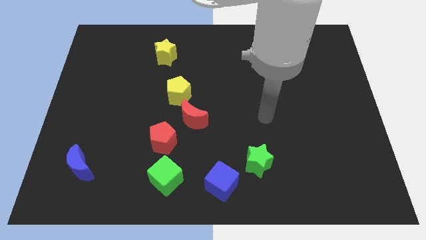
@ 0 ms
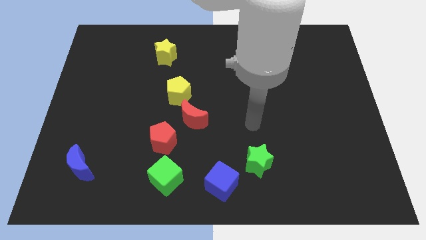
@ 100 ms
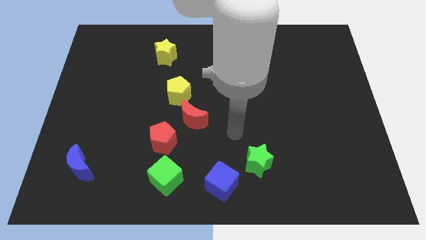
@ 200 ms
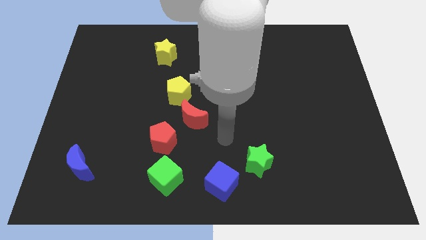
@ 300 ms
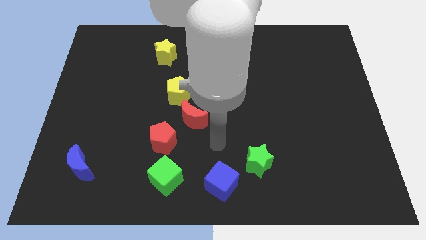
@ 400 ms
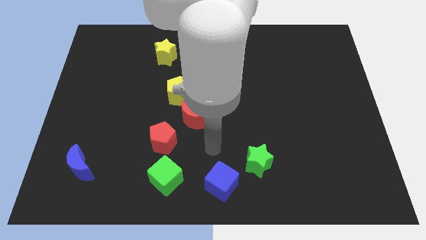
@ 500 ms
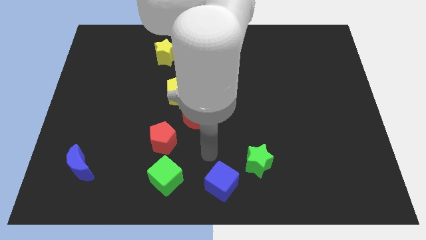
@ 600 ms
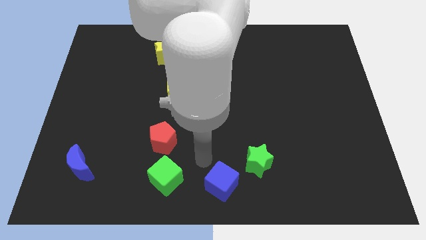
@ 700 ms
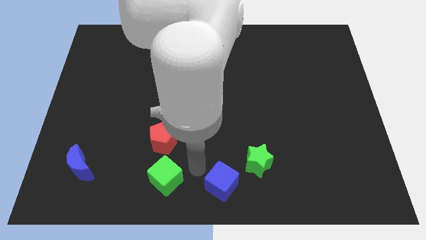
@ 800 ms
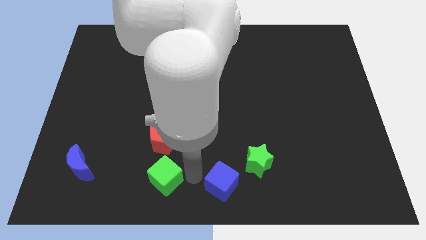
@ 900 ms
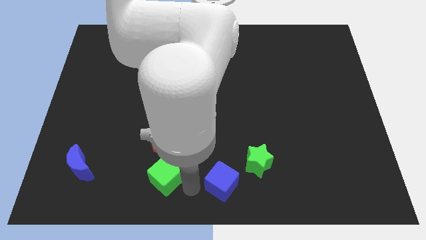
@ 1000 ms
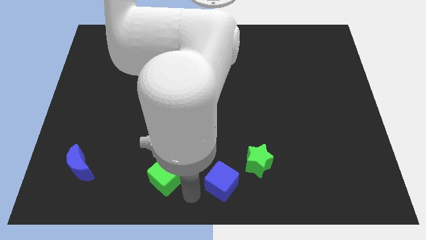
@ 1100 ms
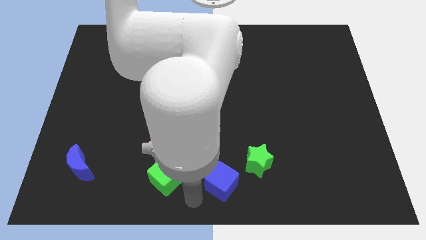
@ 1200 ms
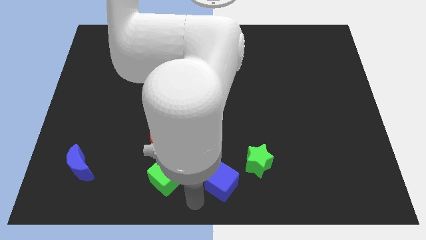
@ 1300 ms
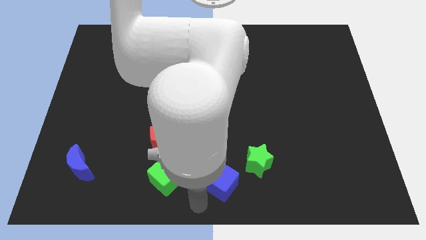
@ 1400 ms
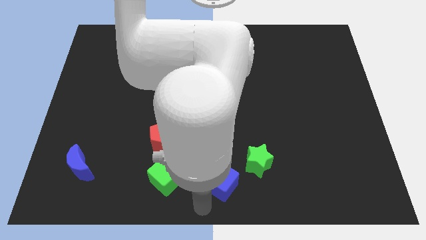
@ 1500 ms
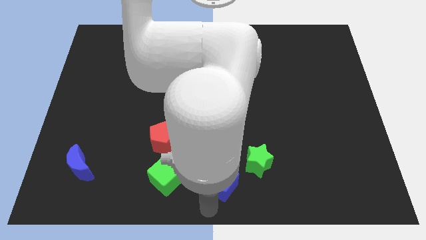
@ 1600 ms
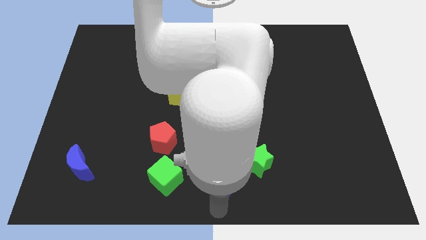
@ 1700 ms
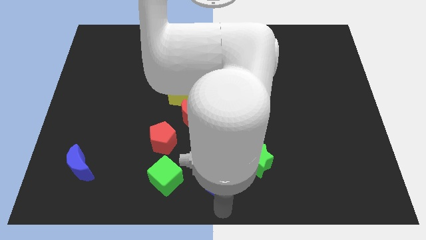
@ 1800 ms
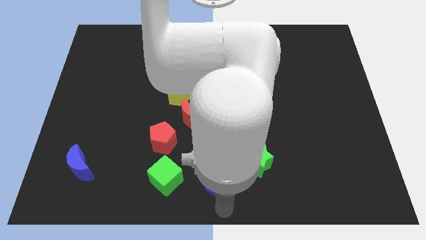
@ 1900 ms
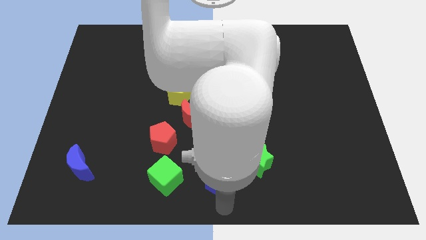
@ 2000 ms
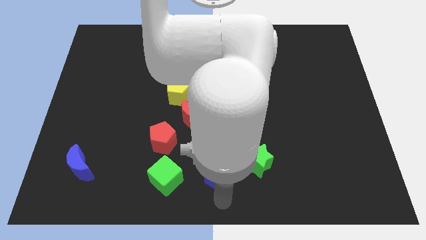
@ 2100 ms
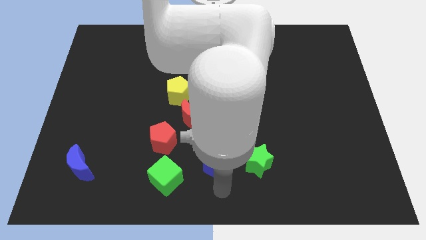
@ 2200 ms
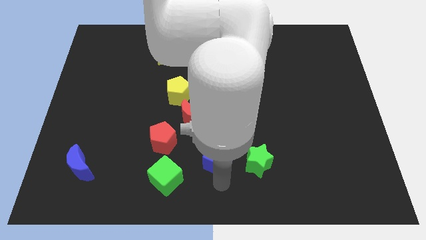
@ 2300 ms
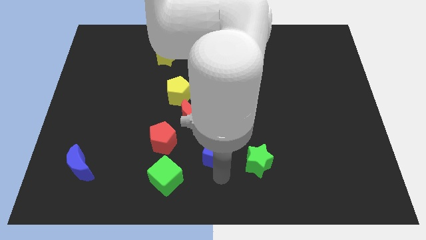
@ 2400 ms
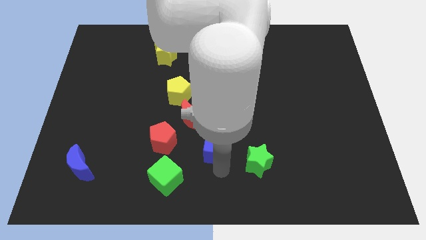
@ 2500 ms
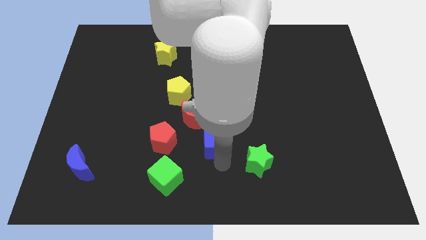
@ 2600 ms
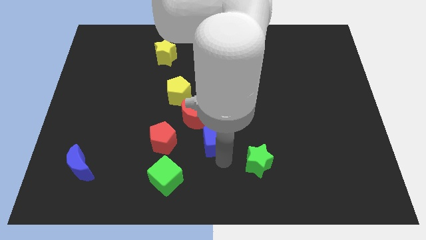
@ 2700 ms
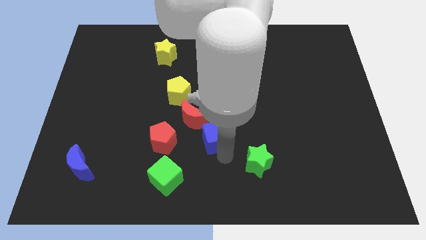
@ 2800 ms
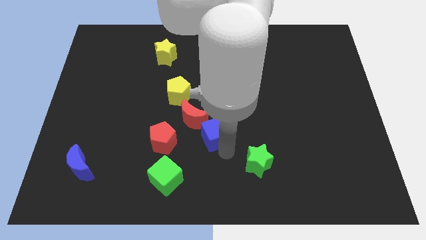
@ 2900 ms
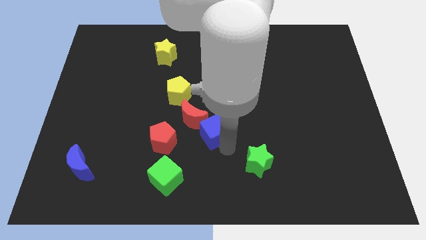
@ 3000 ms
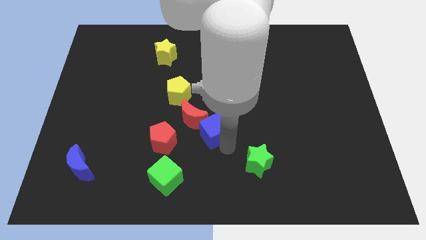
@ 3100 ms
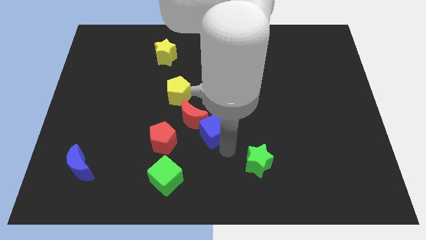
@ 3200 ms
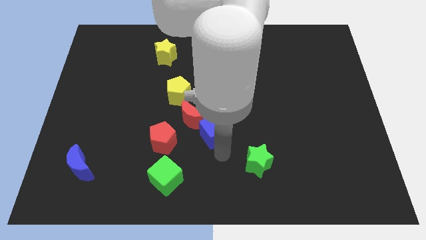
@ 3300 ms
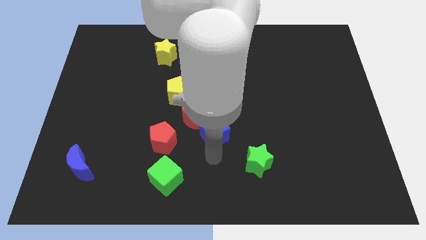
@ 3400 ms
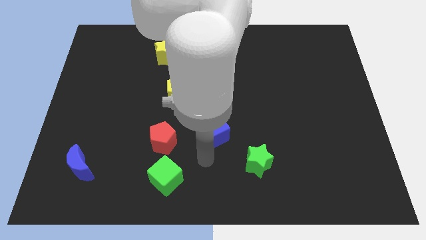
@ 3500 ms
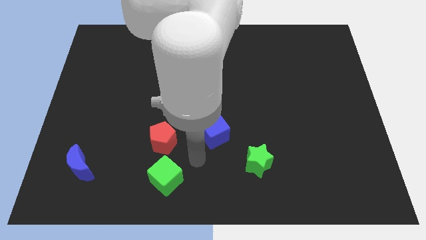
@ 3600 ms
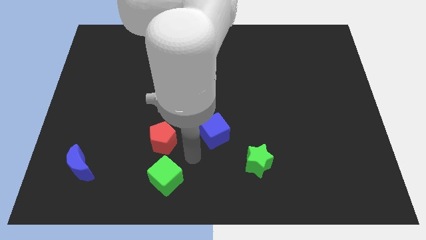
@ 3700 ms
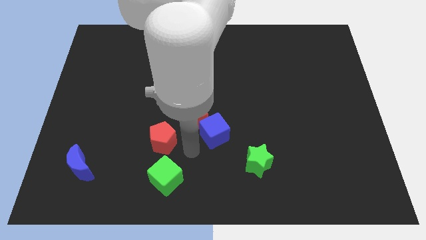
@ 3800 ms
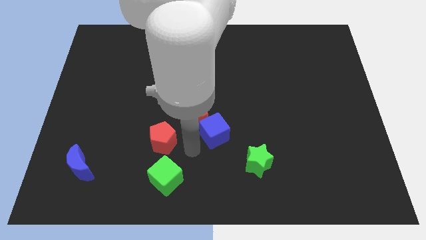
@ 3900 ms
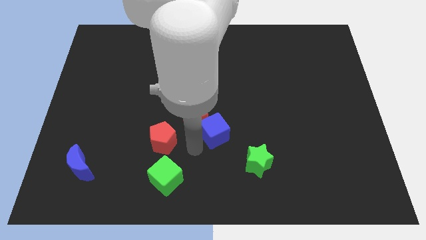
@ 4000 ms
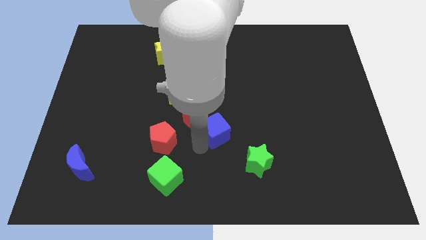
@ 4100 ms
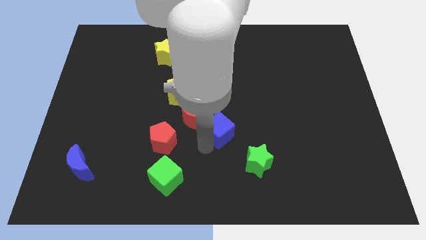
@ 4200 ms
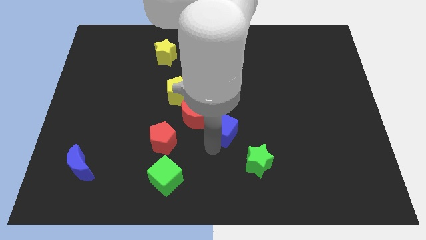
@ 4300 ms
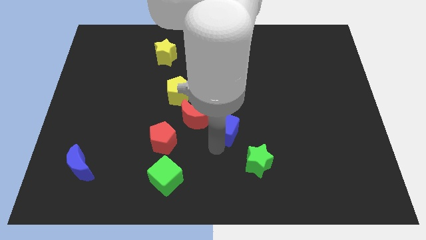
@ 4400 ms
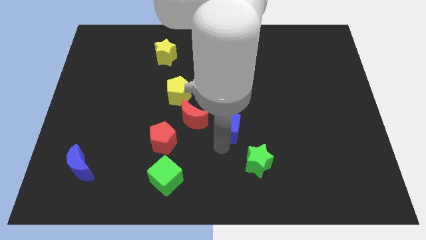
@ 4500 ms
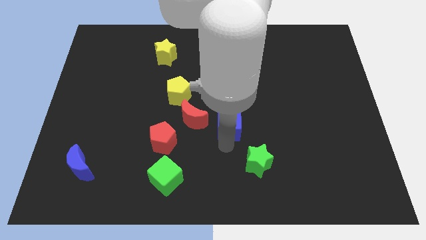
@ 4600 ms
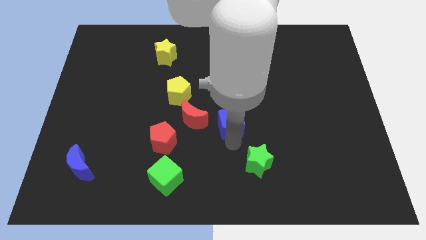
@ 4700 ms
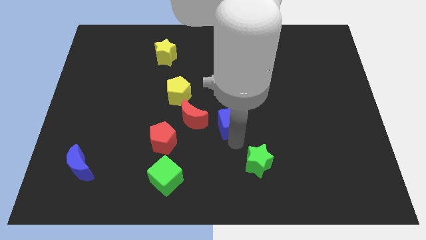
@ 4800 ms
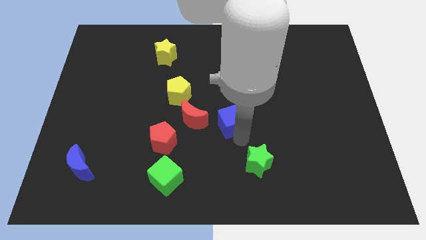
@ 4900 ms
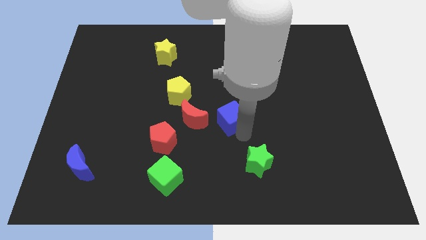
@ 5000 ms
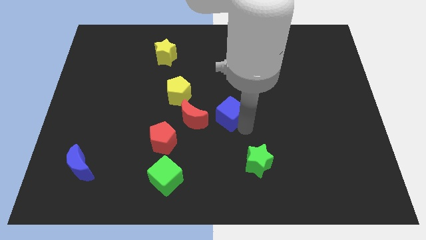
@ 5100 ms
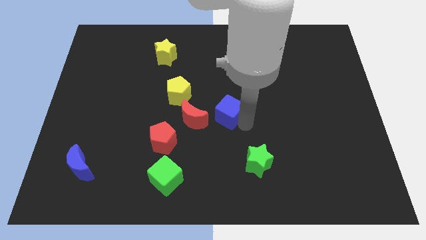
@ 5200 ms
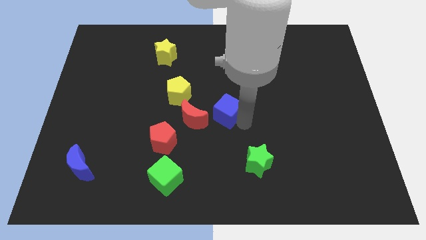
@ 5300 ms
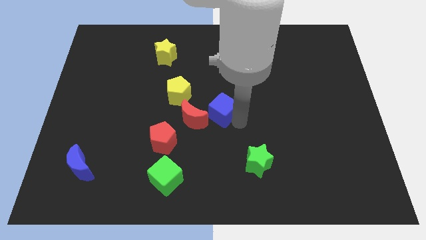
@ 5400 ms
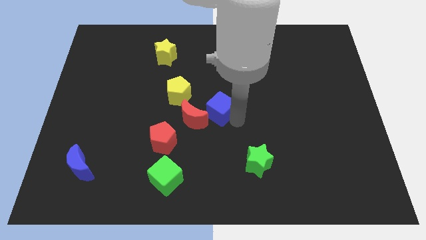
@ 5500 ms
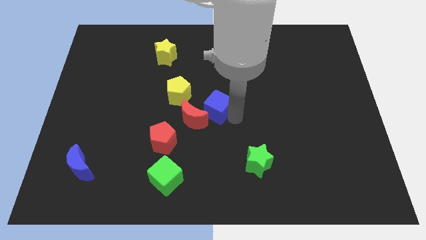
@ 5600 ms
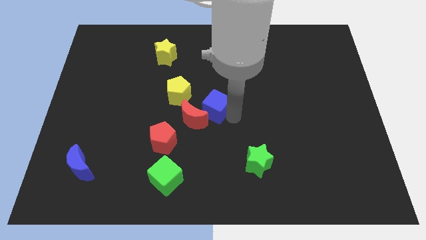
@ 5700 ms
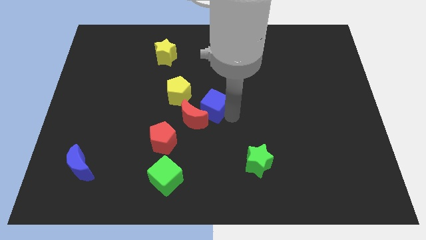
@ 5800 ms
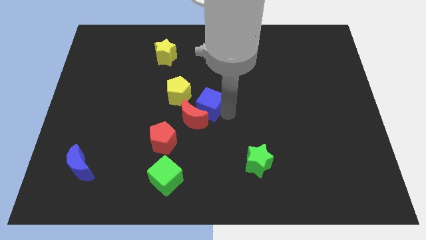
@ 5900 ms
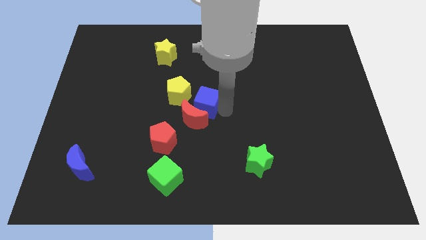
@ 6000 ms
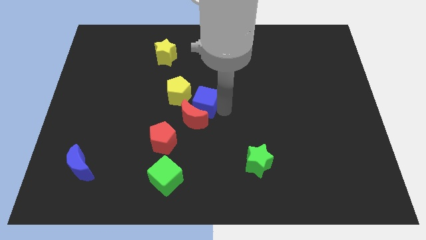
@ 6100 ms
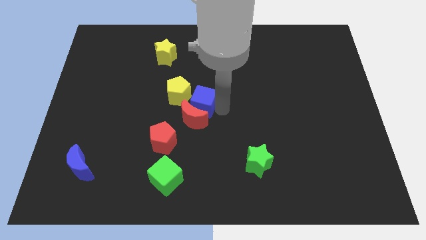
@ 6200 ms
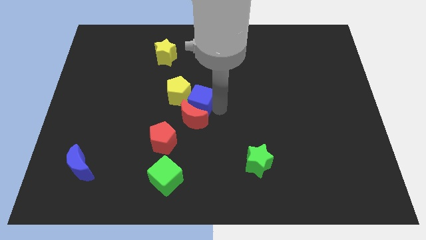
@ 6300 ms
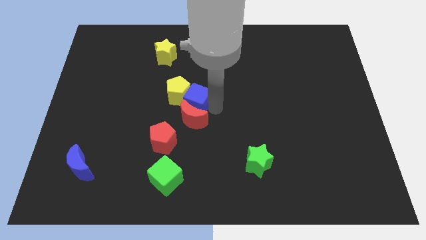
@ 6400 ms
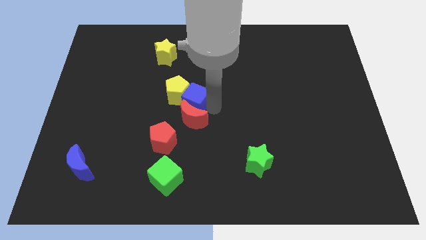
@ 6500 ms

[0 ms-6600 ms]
push the blue cube next to the yellow pentagon

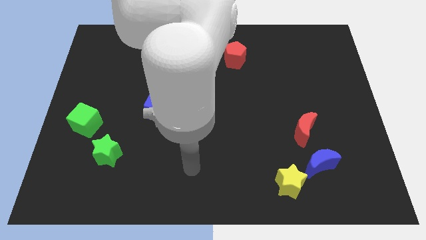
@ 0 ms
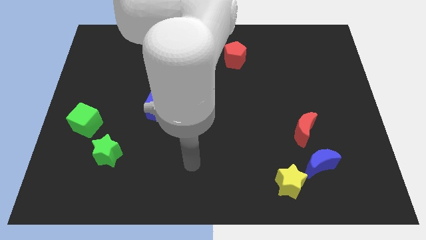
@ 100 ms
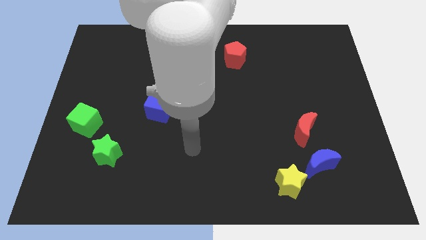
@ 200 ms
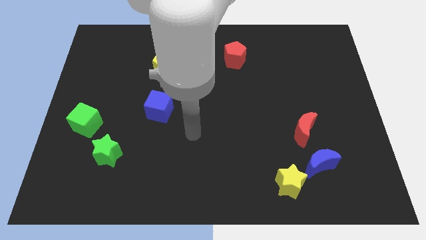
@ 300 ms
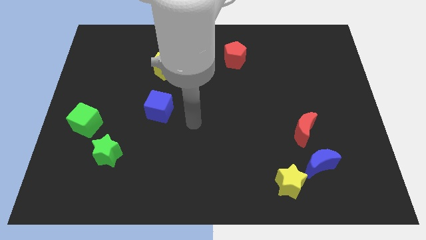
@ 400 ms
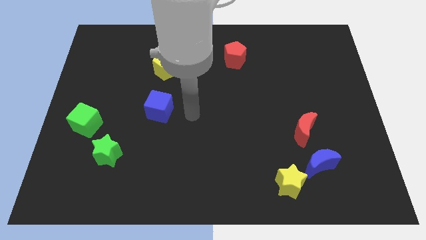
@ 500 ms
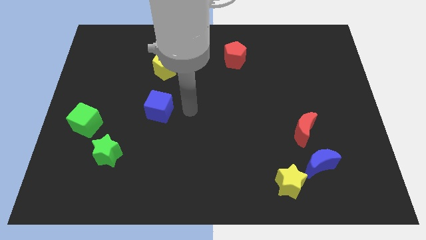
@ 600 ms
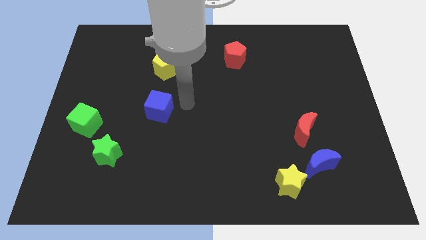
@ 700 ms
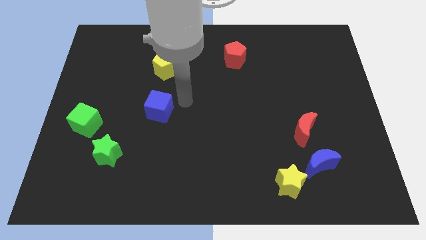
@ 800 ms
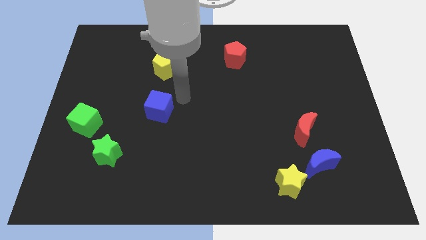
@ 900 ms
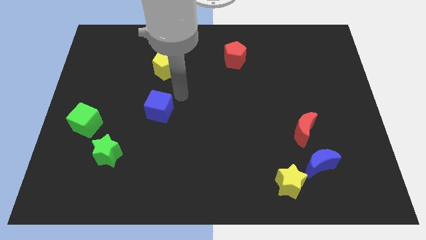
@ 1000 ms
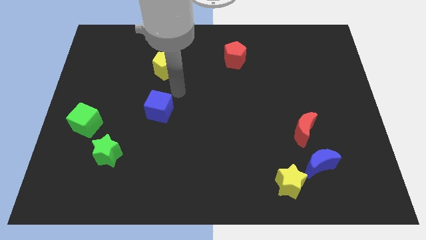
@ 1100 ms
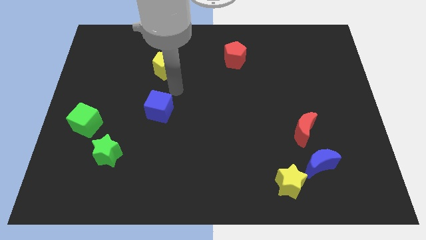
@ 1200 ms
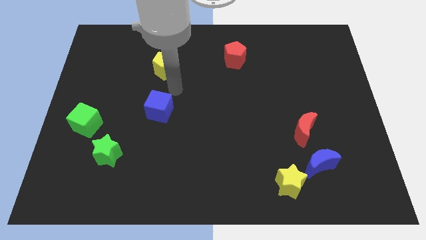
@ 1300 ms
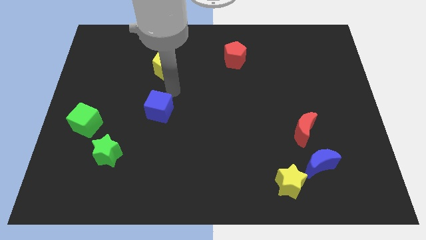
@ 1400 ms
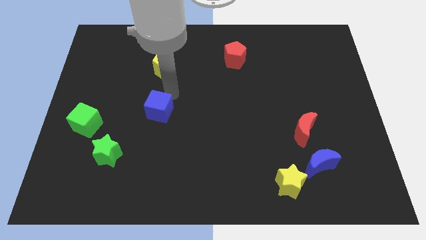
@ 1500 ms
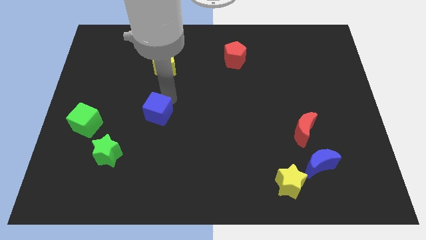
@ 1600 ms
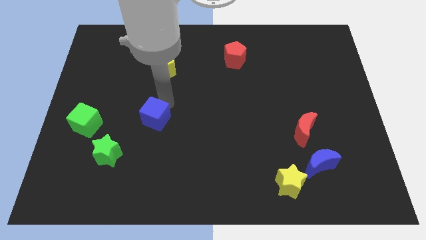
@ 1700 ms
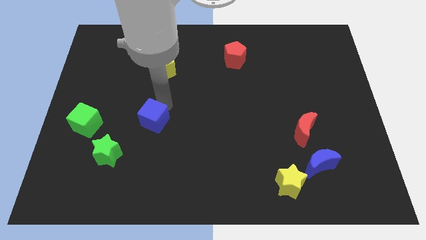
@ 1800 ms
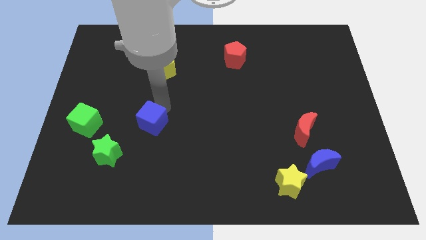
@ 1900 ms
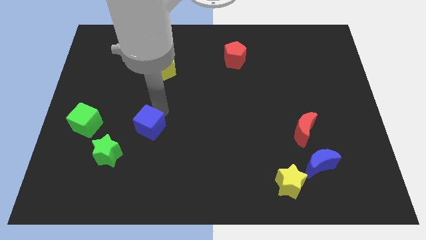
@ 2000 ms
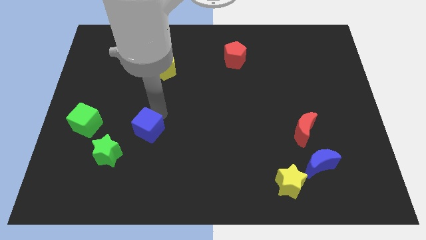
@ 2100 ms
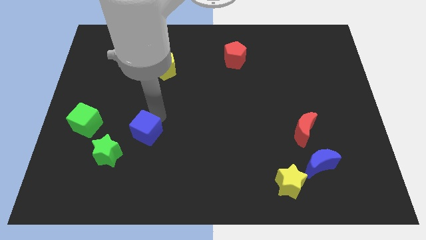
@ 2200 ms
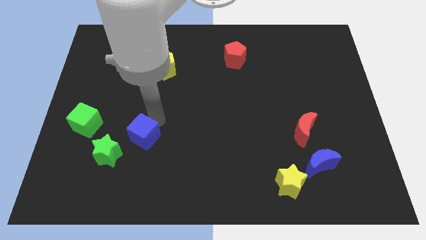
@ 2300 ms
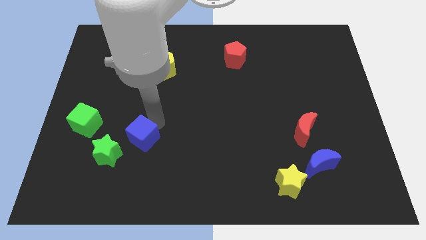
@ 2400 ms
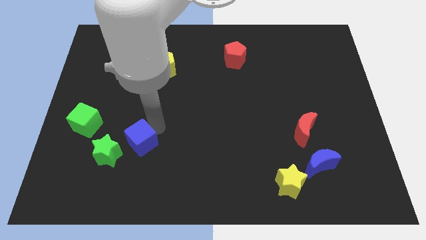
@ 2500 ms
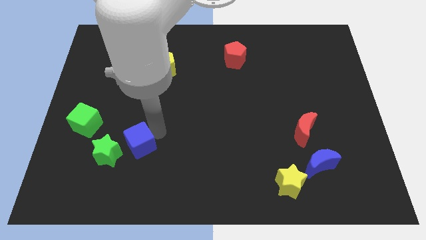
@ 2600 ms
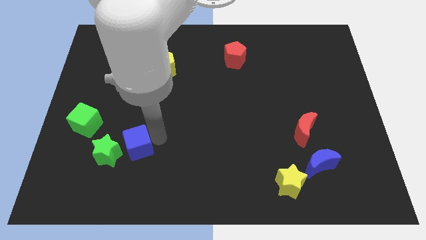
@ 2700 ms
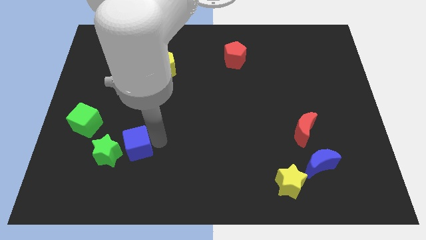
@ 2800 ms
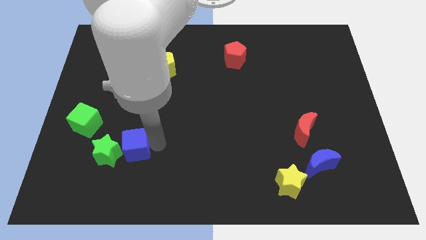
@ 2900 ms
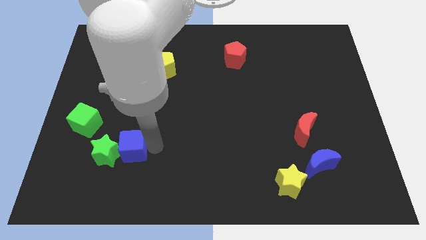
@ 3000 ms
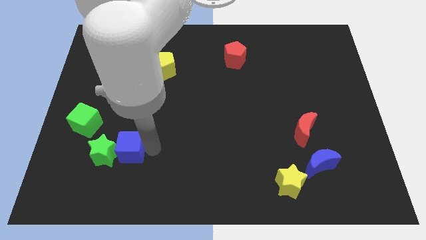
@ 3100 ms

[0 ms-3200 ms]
put the blue cube towards the green star
